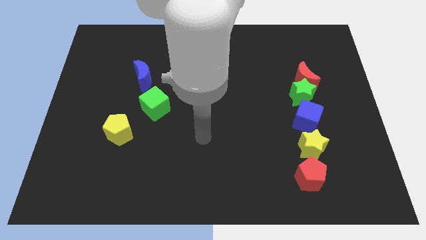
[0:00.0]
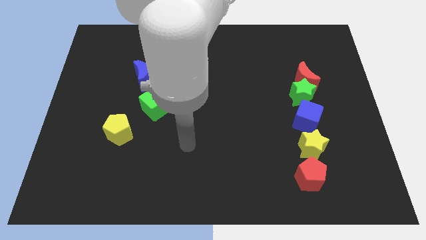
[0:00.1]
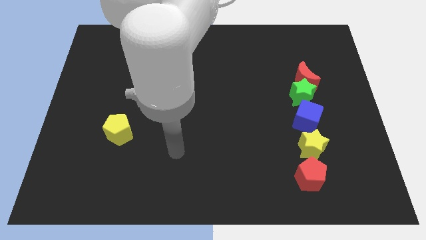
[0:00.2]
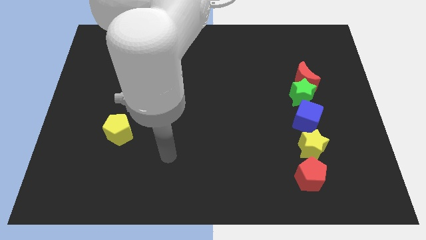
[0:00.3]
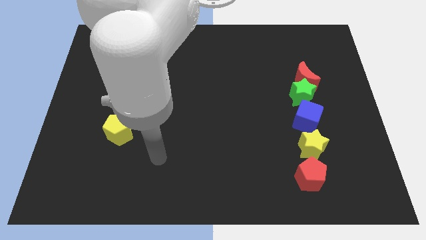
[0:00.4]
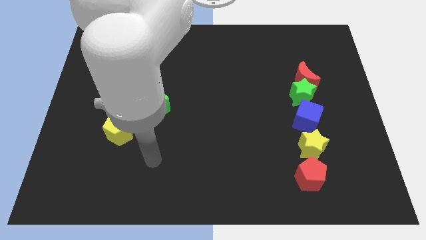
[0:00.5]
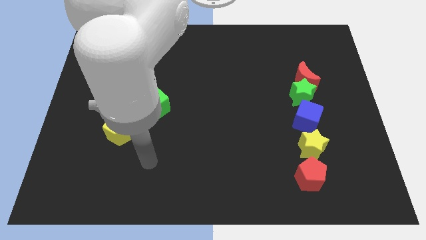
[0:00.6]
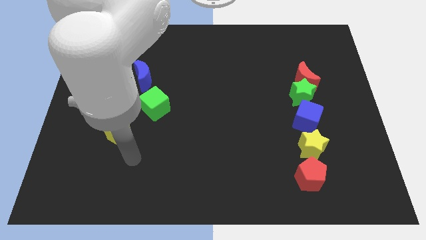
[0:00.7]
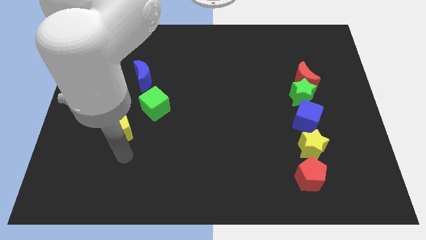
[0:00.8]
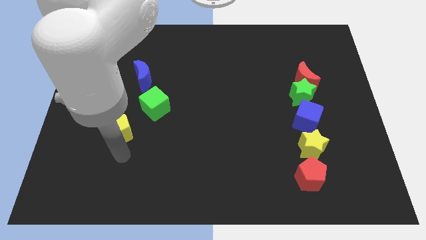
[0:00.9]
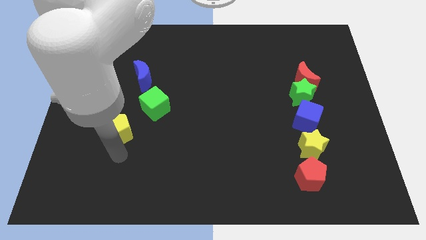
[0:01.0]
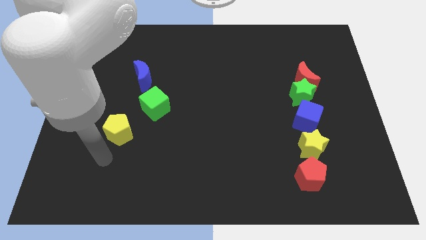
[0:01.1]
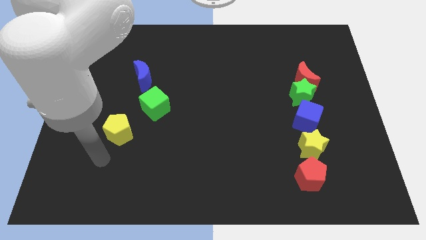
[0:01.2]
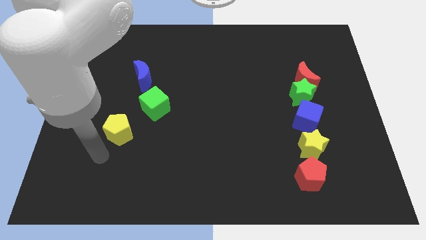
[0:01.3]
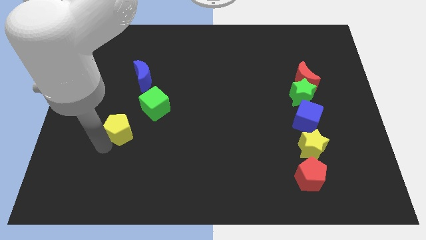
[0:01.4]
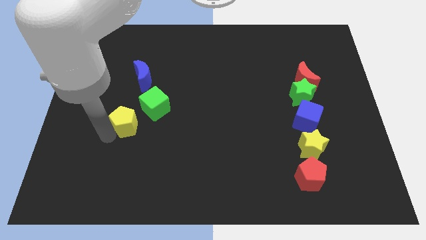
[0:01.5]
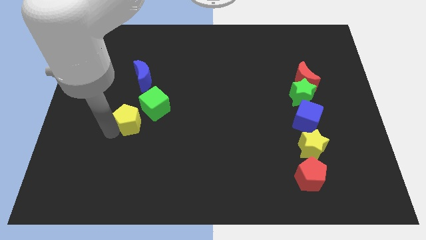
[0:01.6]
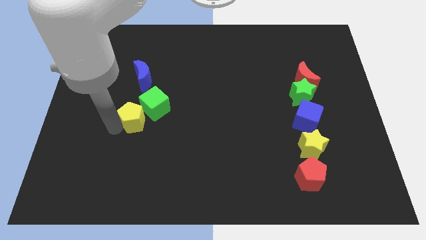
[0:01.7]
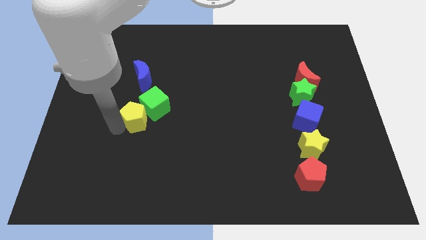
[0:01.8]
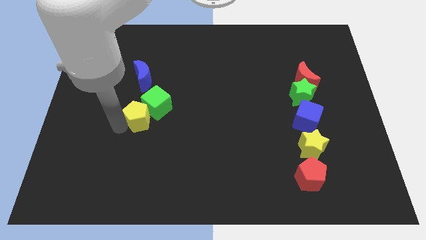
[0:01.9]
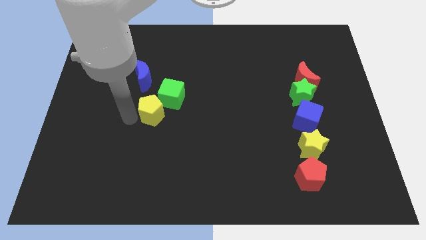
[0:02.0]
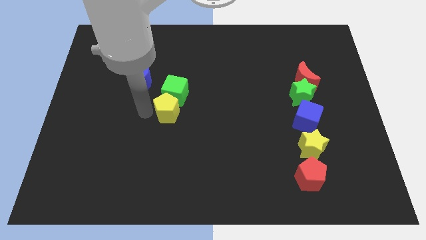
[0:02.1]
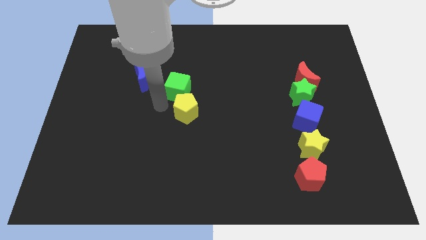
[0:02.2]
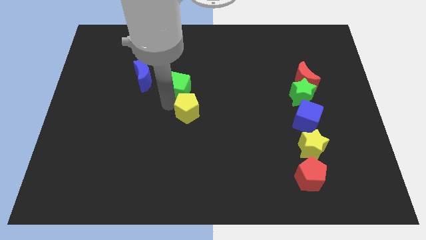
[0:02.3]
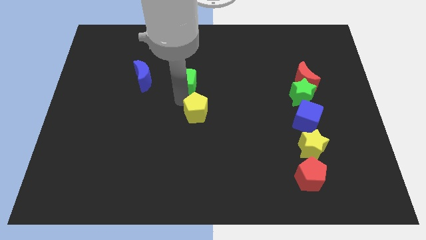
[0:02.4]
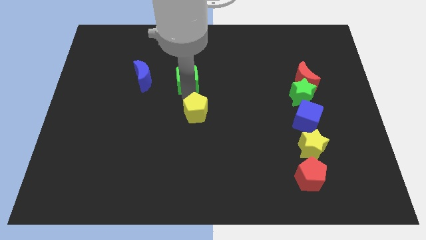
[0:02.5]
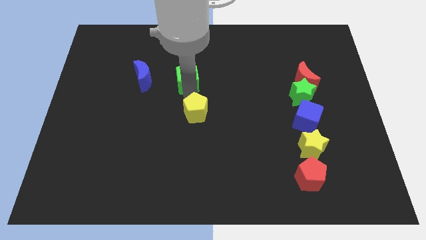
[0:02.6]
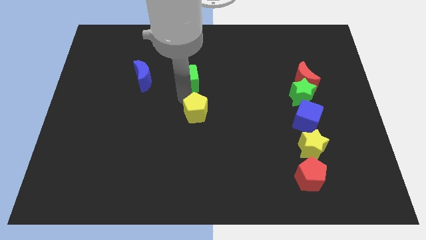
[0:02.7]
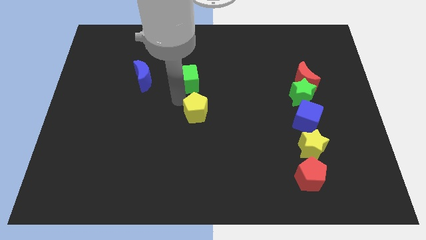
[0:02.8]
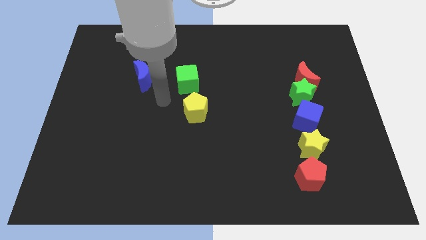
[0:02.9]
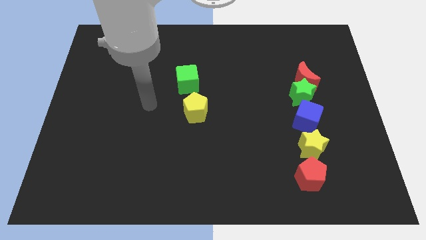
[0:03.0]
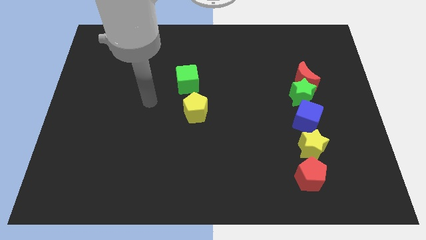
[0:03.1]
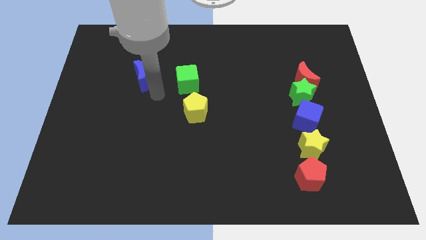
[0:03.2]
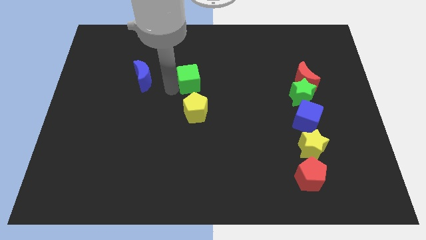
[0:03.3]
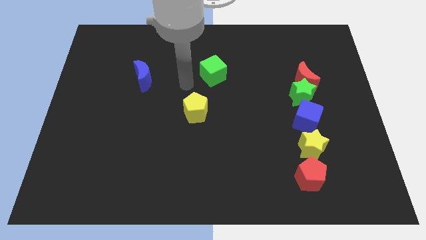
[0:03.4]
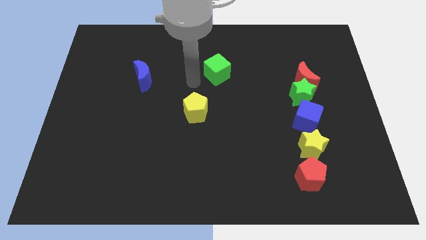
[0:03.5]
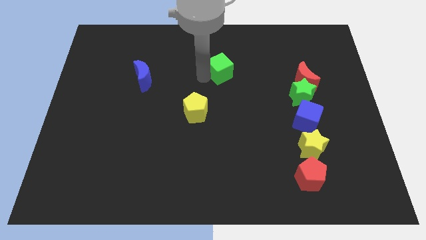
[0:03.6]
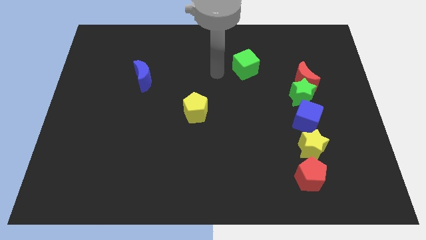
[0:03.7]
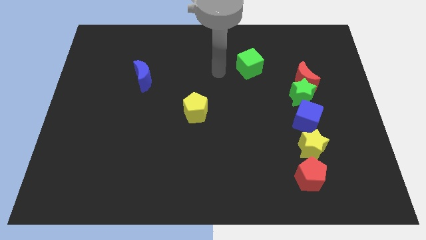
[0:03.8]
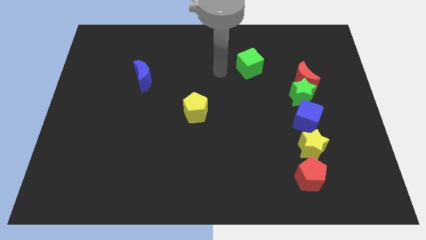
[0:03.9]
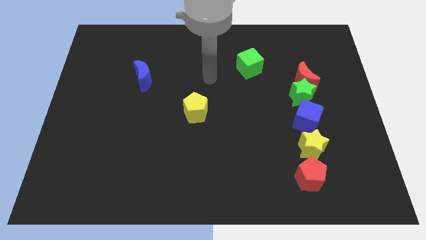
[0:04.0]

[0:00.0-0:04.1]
move the yellow pentagon and the green cube slightly towards top of the board

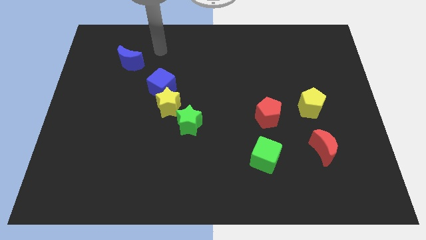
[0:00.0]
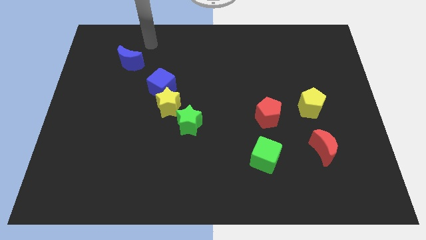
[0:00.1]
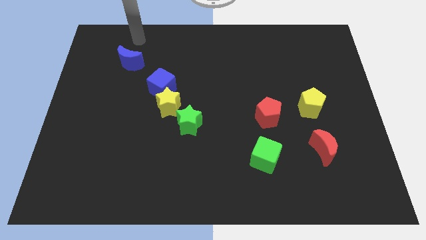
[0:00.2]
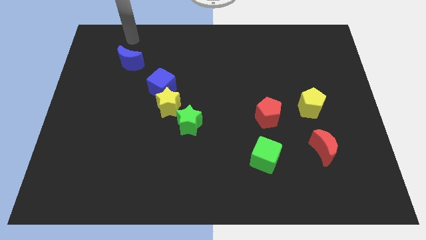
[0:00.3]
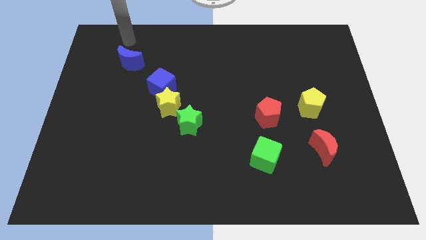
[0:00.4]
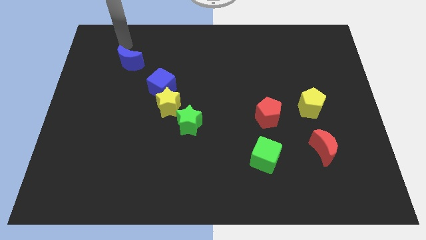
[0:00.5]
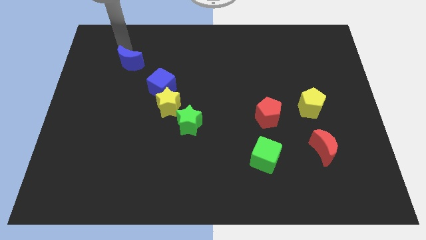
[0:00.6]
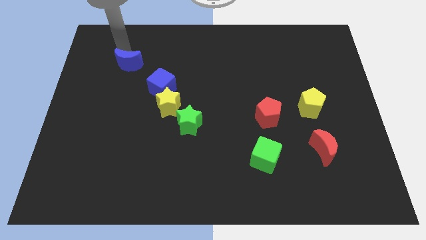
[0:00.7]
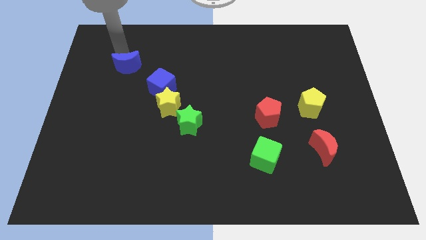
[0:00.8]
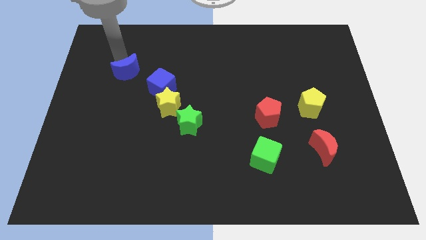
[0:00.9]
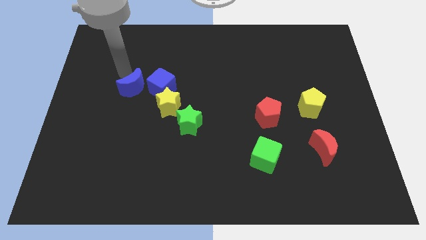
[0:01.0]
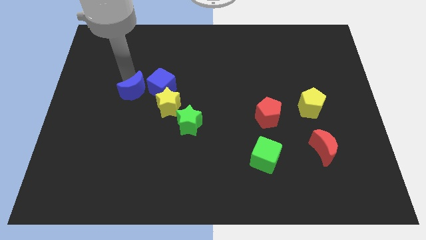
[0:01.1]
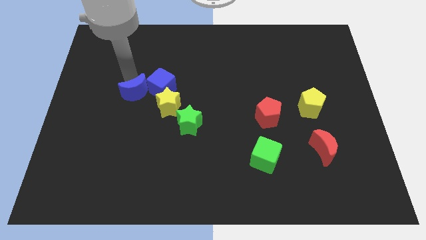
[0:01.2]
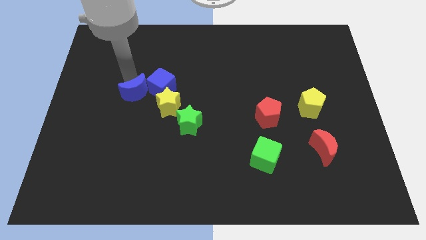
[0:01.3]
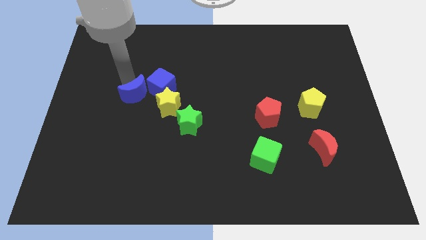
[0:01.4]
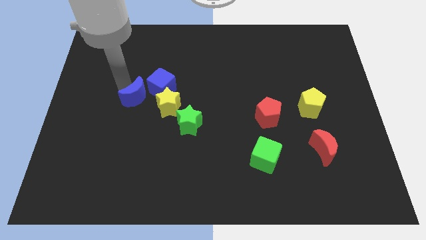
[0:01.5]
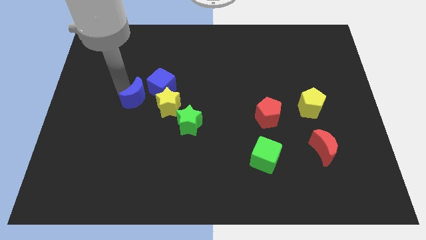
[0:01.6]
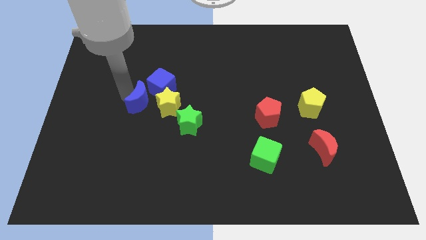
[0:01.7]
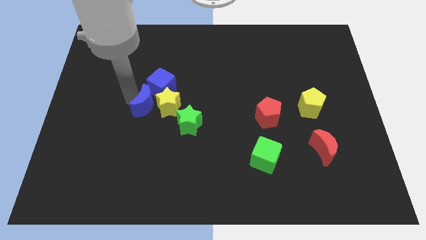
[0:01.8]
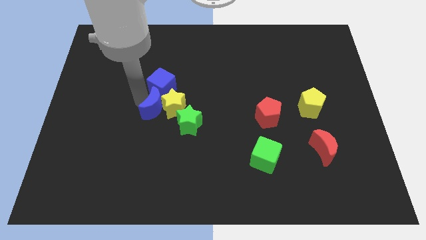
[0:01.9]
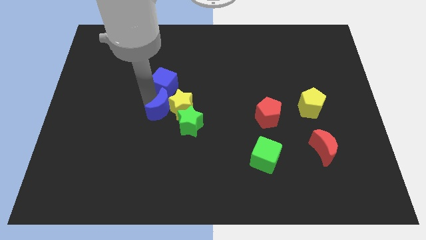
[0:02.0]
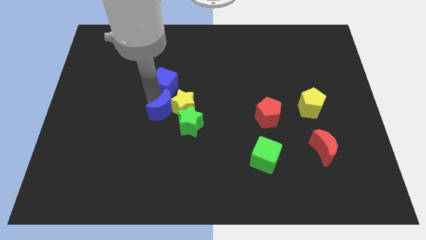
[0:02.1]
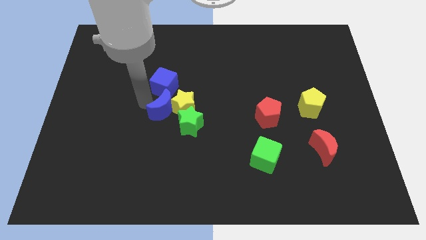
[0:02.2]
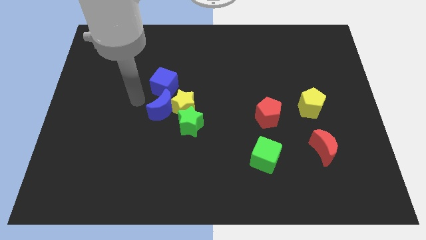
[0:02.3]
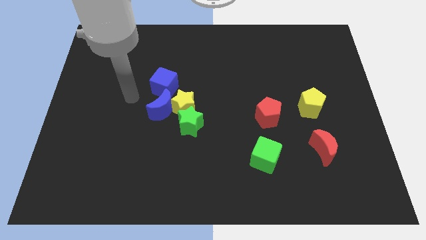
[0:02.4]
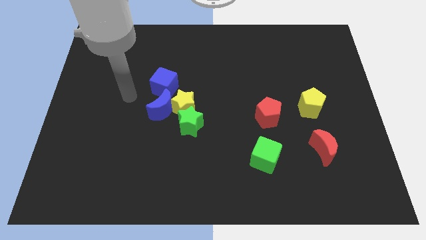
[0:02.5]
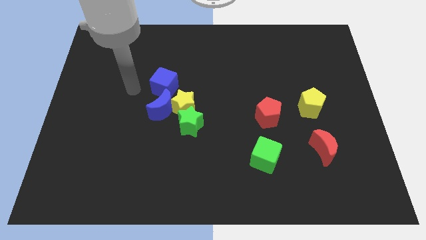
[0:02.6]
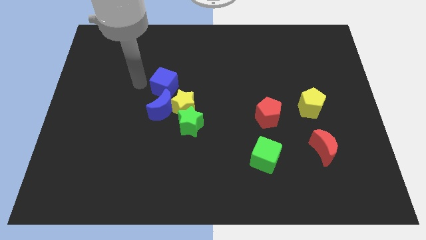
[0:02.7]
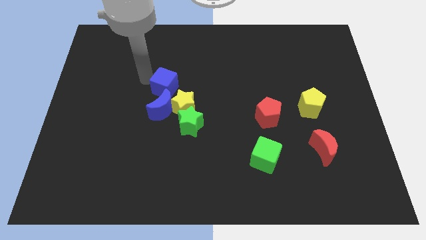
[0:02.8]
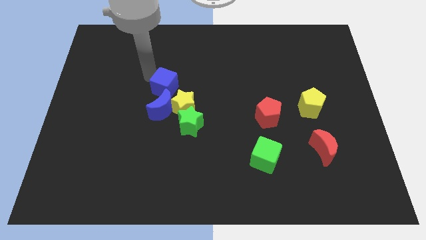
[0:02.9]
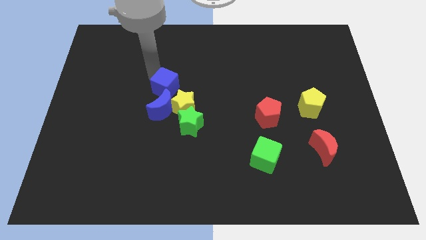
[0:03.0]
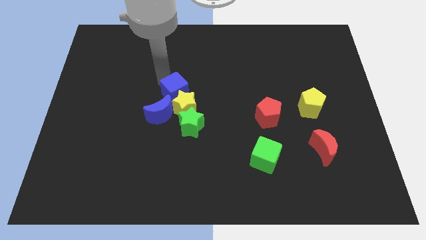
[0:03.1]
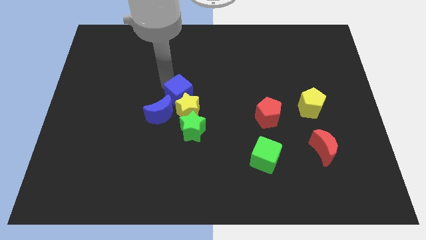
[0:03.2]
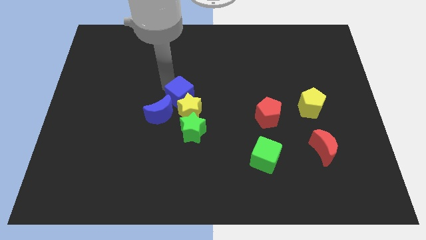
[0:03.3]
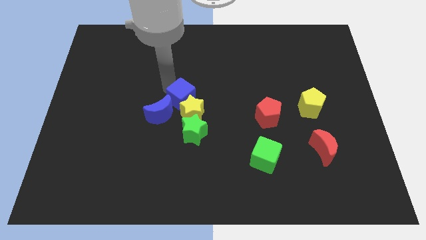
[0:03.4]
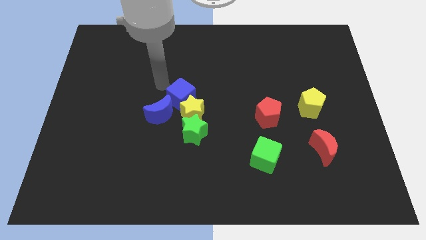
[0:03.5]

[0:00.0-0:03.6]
push blue cube slightly towards down

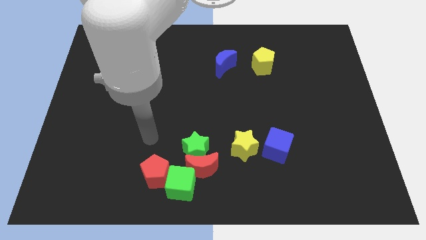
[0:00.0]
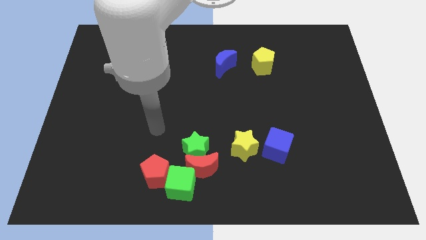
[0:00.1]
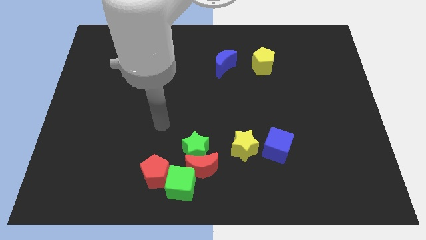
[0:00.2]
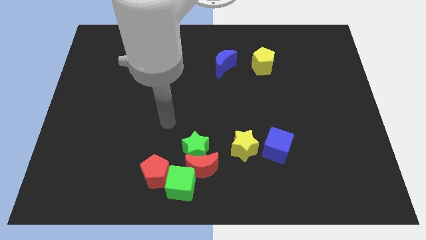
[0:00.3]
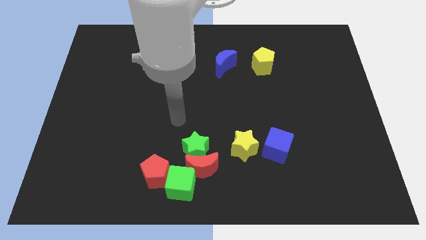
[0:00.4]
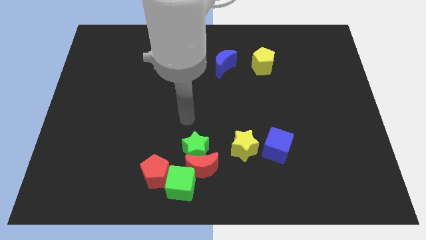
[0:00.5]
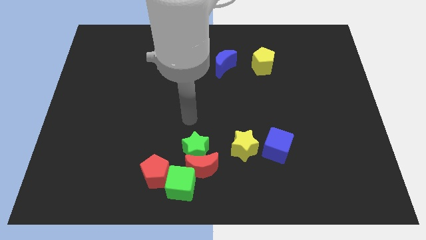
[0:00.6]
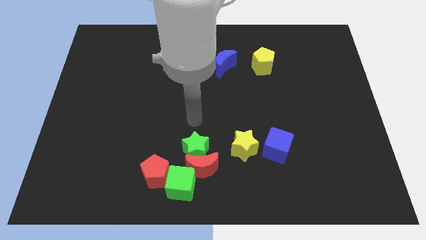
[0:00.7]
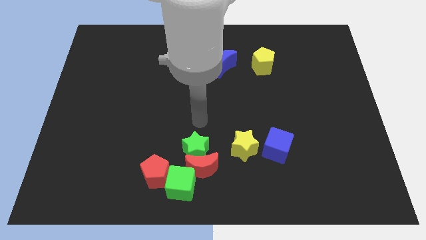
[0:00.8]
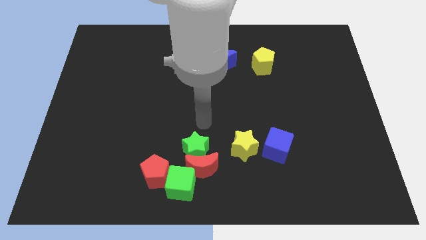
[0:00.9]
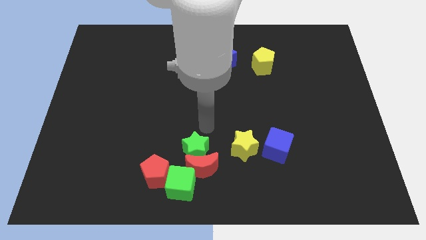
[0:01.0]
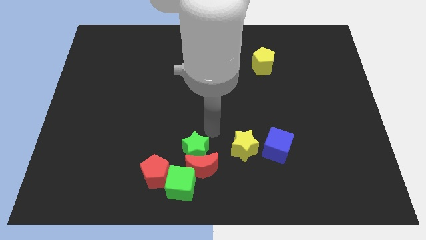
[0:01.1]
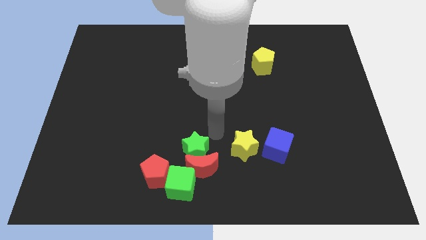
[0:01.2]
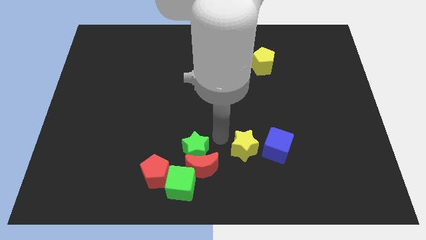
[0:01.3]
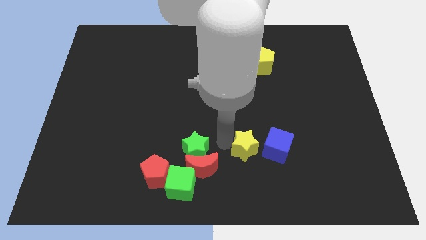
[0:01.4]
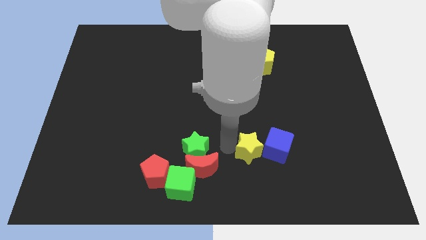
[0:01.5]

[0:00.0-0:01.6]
move the arm at the left side of the yellow star
